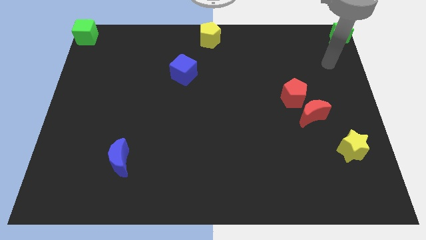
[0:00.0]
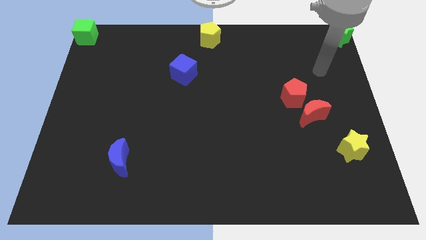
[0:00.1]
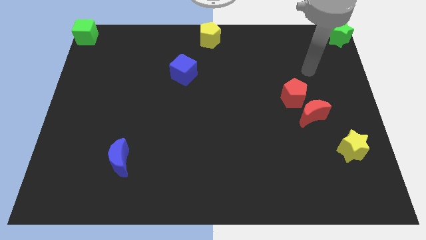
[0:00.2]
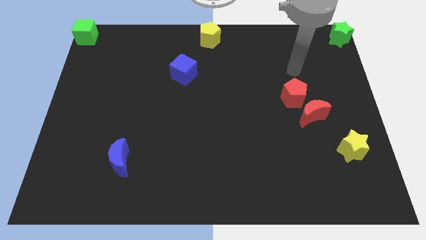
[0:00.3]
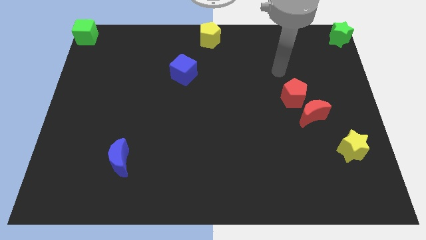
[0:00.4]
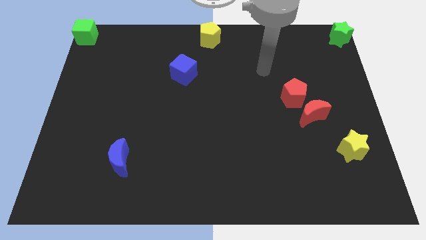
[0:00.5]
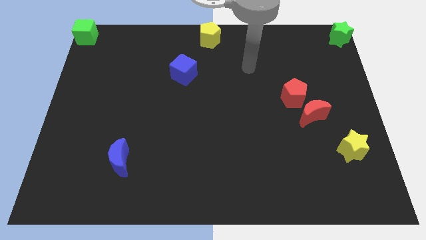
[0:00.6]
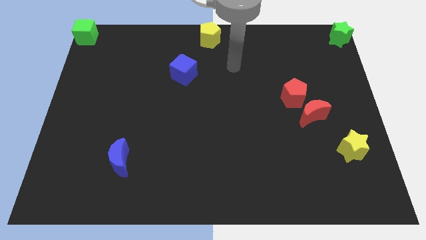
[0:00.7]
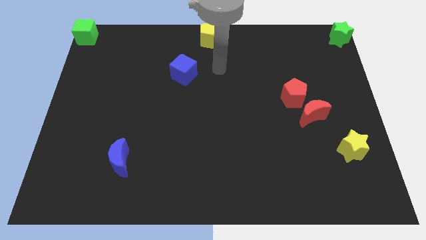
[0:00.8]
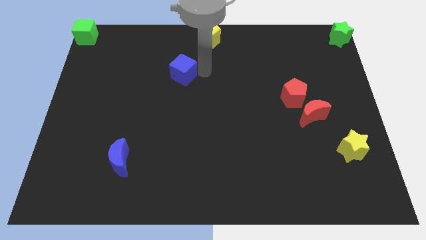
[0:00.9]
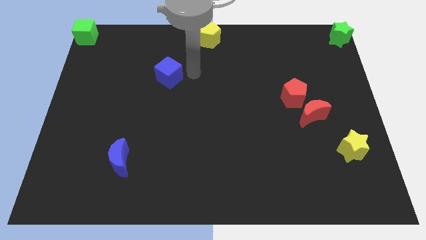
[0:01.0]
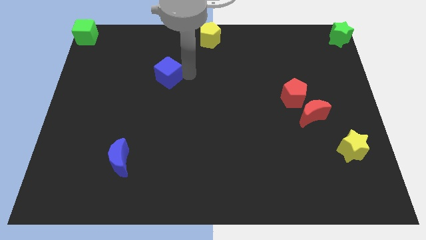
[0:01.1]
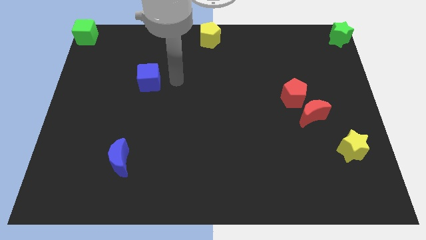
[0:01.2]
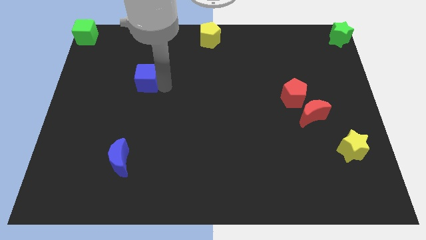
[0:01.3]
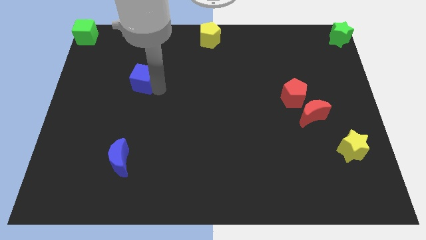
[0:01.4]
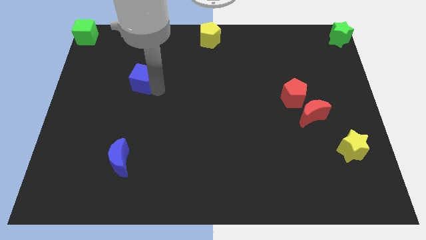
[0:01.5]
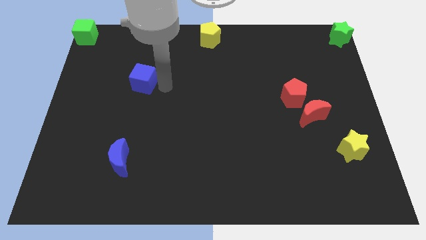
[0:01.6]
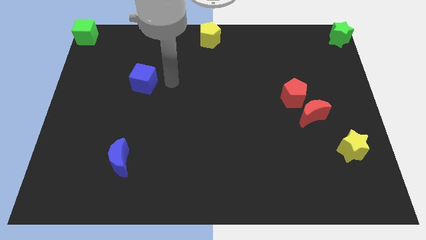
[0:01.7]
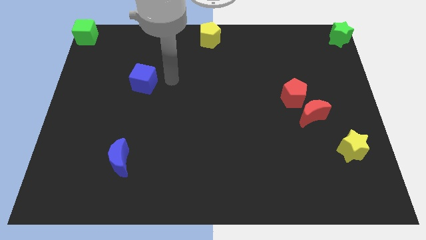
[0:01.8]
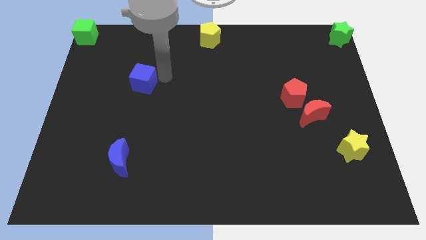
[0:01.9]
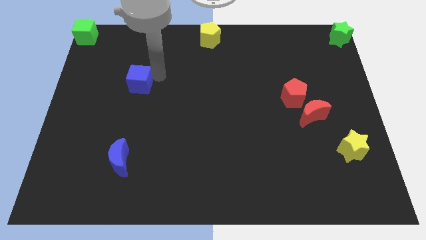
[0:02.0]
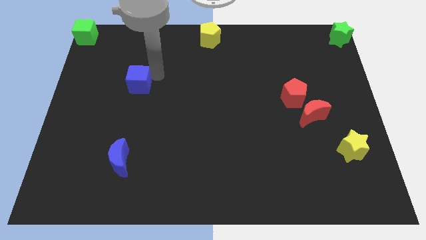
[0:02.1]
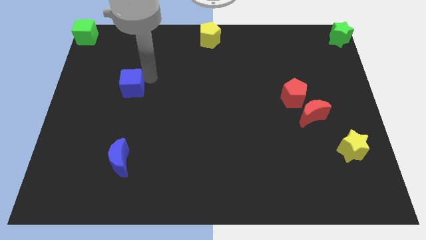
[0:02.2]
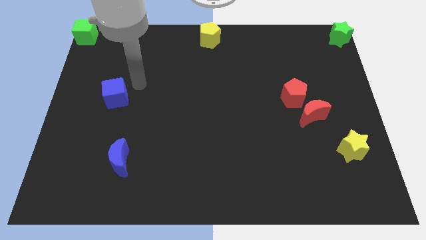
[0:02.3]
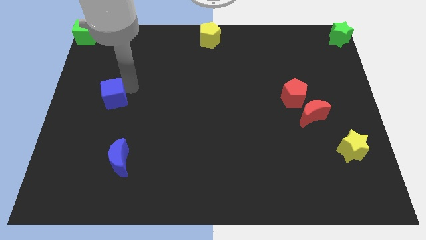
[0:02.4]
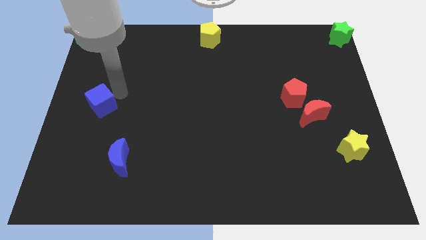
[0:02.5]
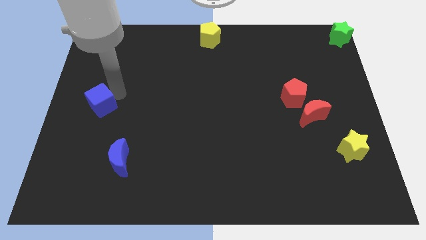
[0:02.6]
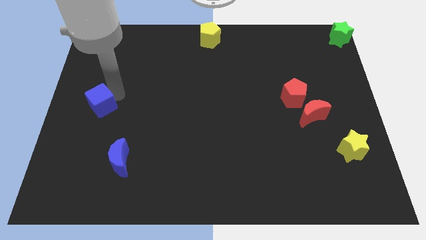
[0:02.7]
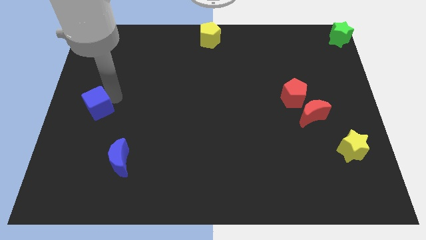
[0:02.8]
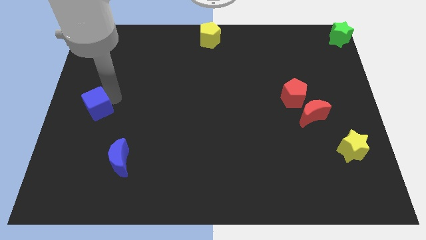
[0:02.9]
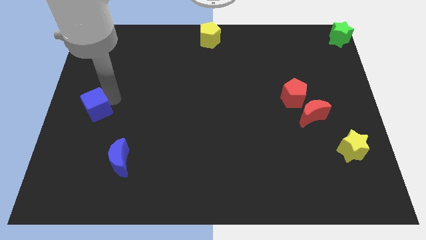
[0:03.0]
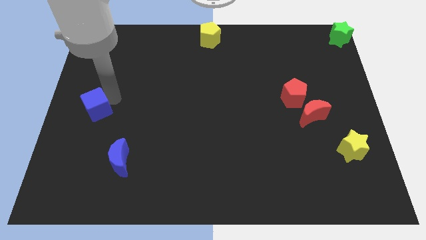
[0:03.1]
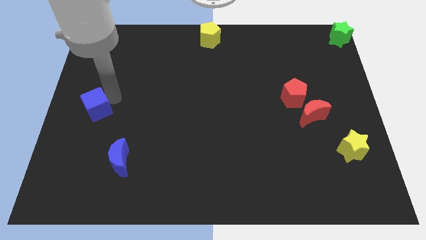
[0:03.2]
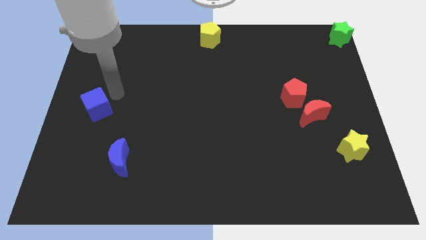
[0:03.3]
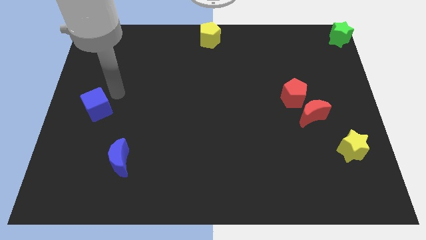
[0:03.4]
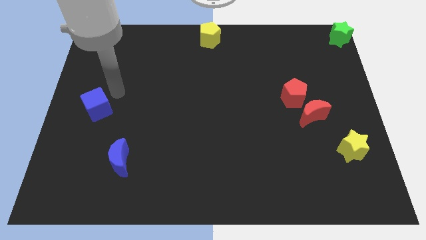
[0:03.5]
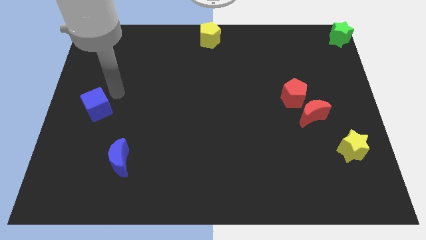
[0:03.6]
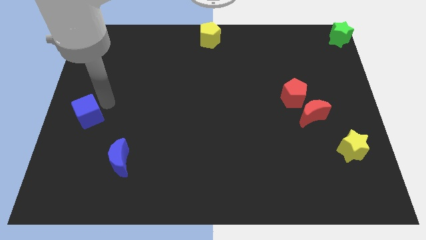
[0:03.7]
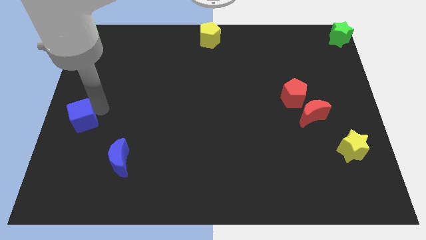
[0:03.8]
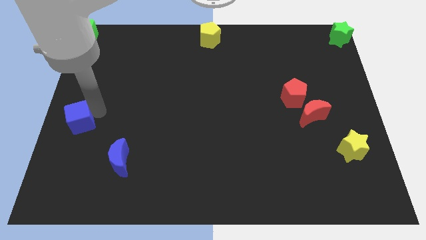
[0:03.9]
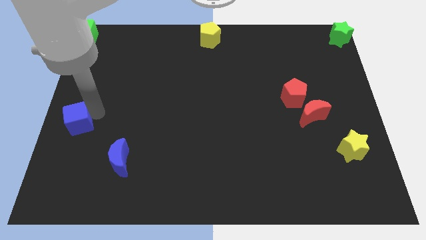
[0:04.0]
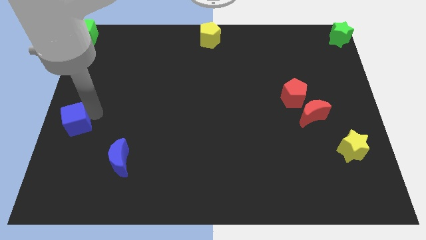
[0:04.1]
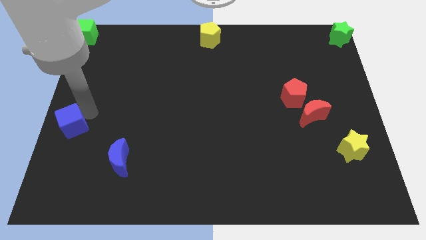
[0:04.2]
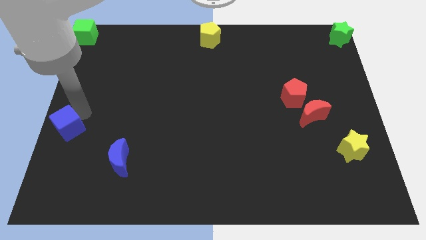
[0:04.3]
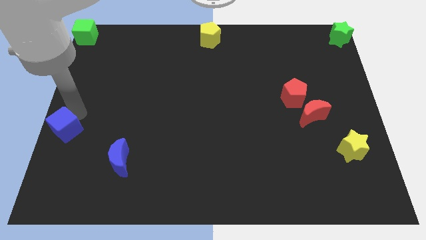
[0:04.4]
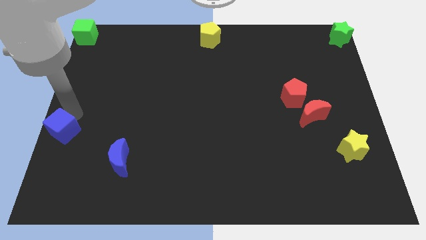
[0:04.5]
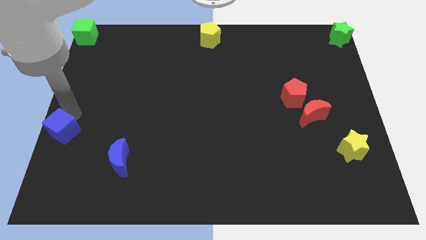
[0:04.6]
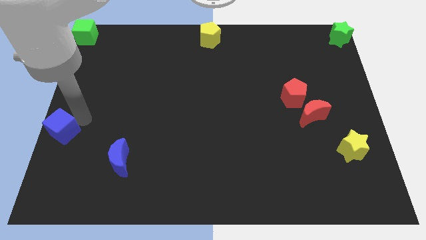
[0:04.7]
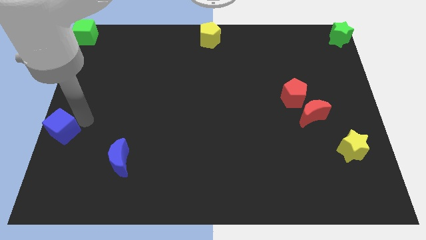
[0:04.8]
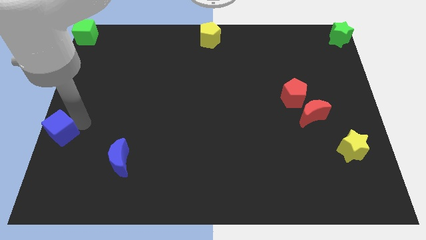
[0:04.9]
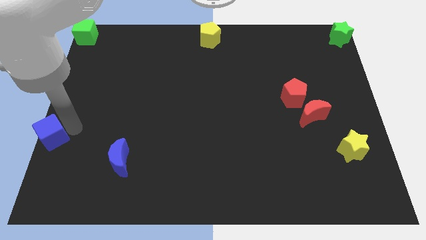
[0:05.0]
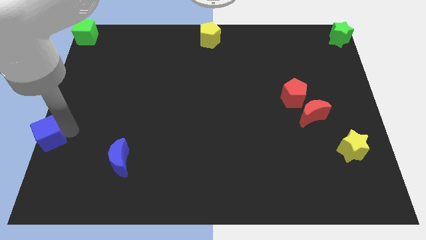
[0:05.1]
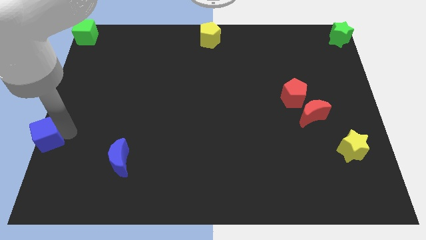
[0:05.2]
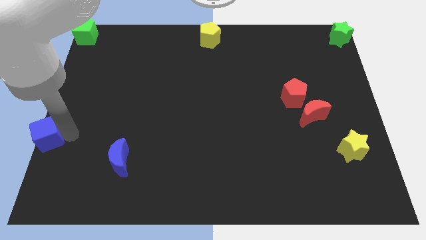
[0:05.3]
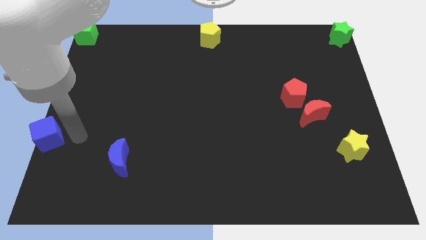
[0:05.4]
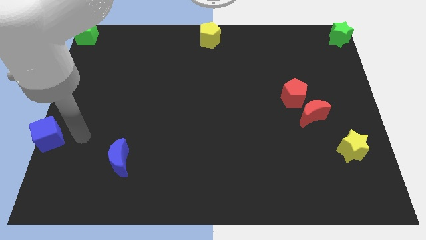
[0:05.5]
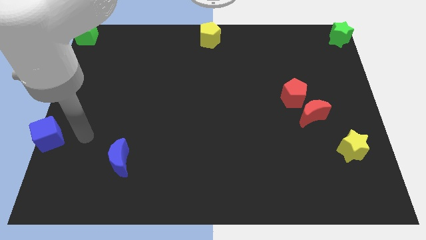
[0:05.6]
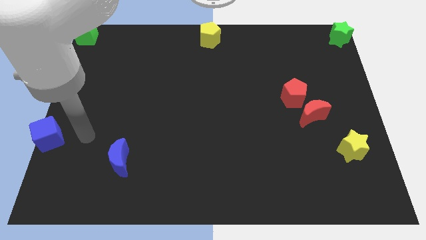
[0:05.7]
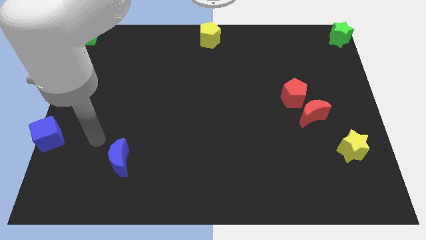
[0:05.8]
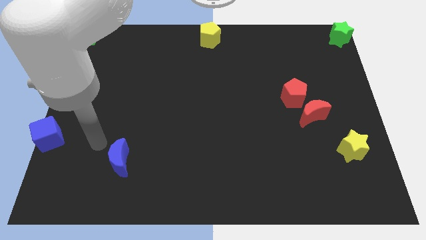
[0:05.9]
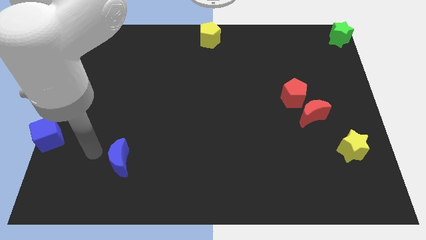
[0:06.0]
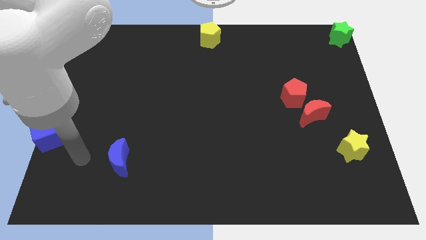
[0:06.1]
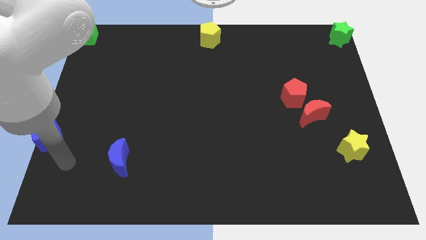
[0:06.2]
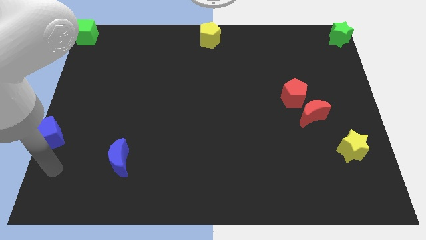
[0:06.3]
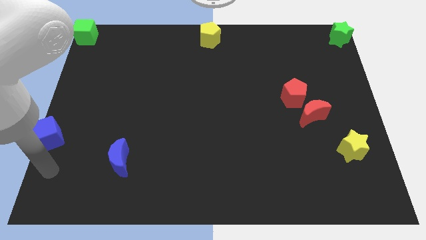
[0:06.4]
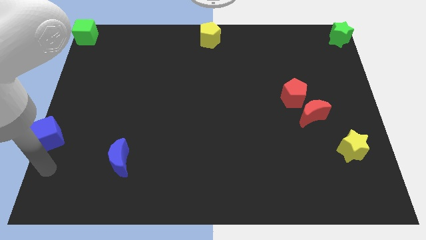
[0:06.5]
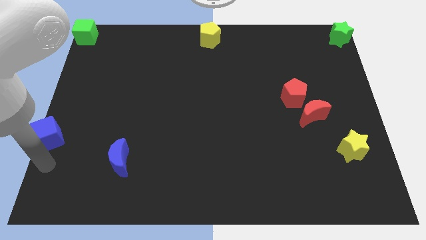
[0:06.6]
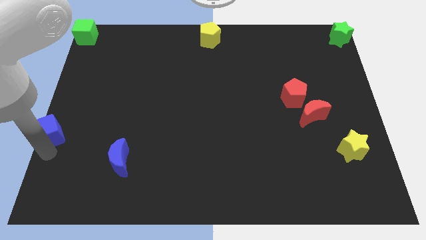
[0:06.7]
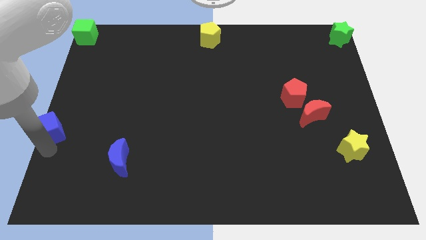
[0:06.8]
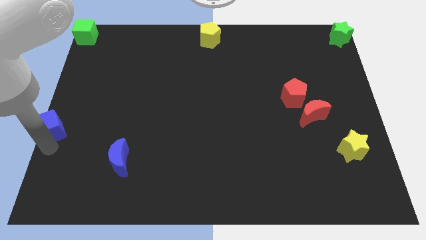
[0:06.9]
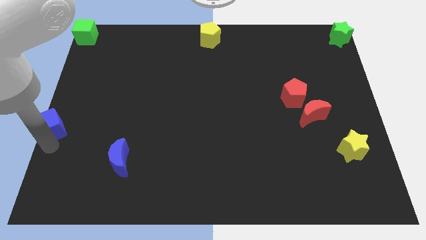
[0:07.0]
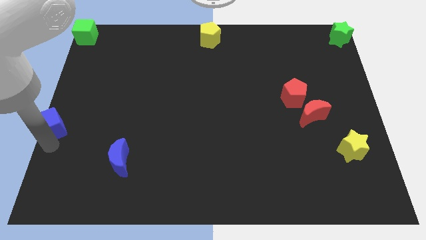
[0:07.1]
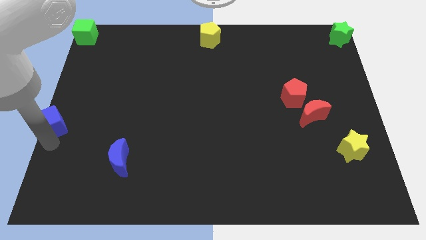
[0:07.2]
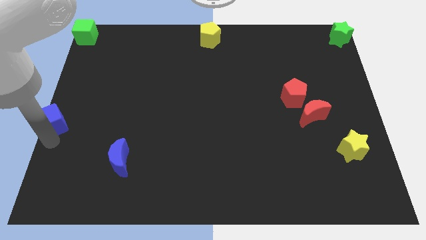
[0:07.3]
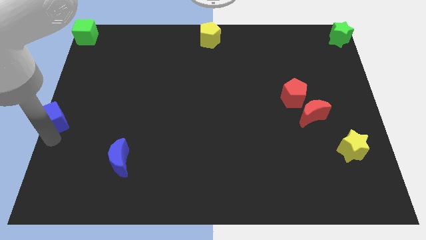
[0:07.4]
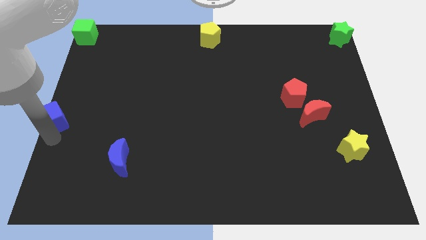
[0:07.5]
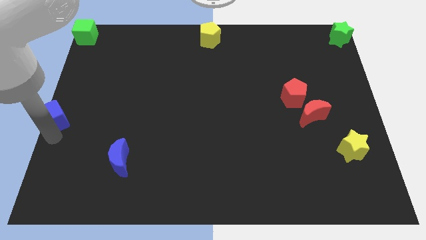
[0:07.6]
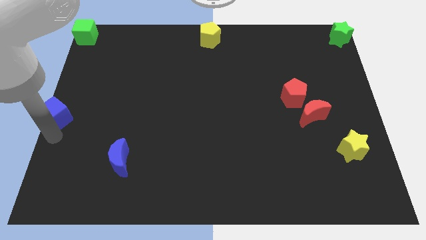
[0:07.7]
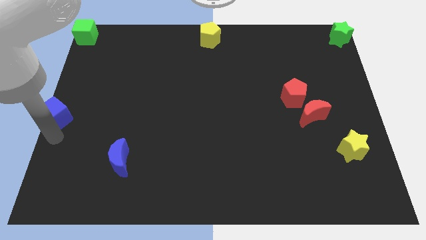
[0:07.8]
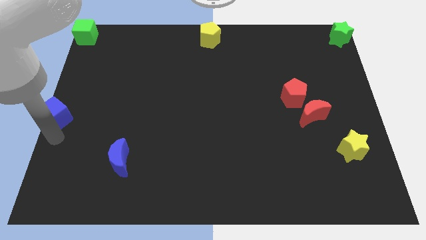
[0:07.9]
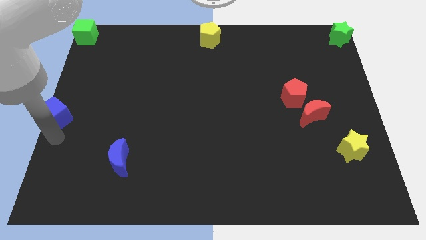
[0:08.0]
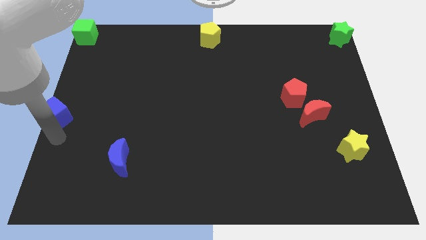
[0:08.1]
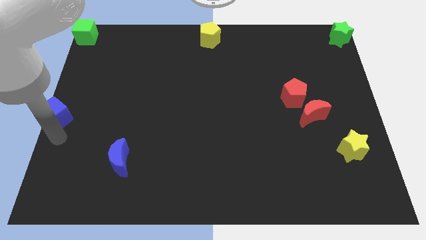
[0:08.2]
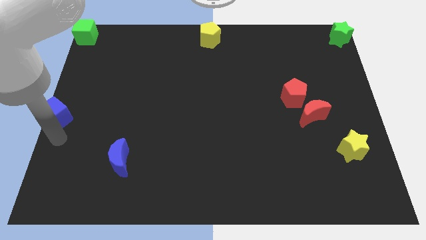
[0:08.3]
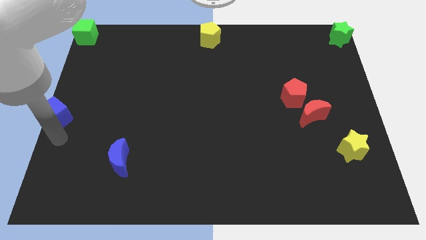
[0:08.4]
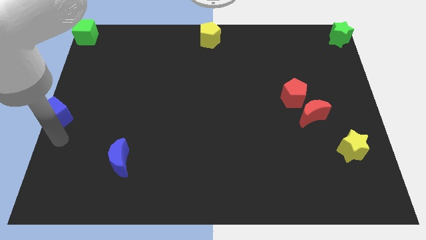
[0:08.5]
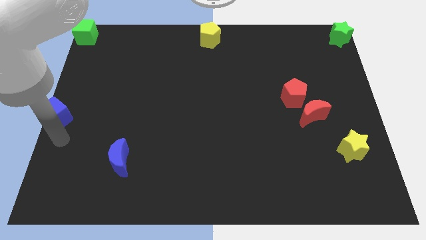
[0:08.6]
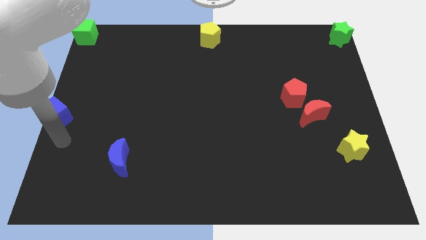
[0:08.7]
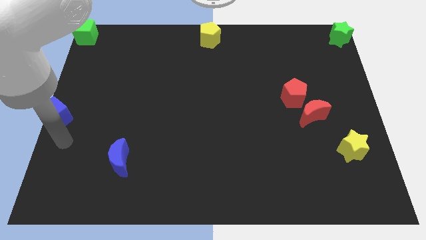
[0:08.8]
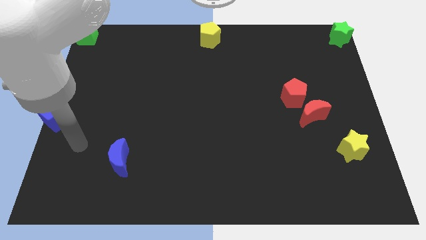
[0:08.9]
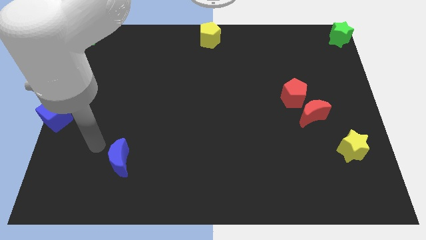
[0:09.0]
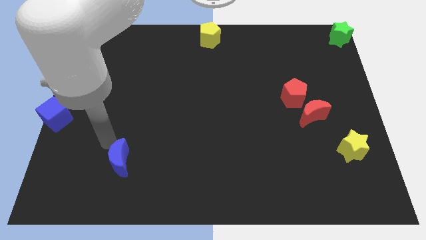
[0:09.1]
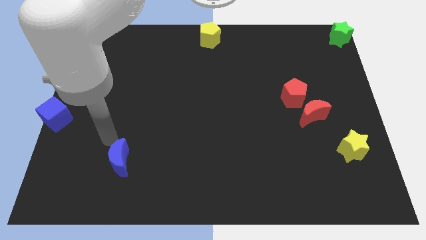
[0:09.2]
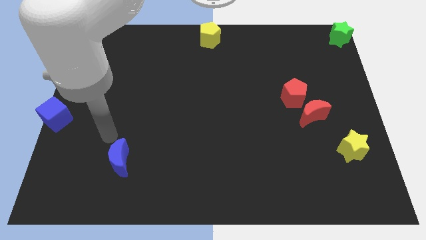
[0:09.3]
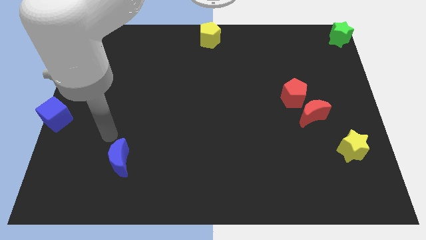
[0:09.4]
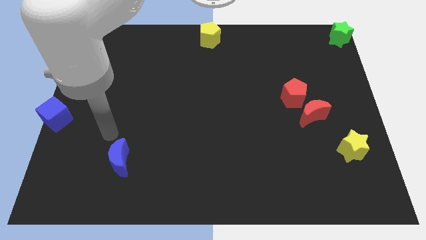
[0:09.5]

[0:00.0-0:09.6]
push the blue cube to the center left of the board
